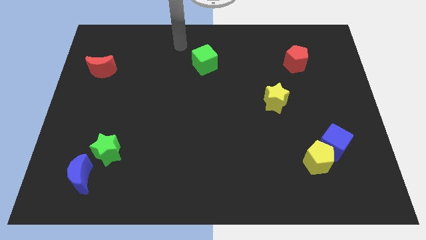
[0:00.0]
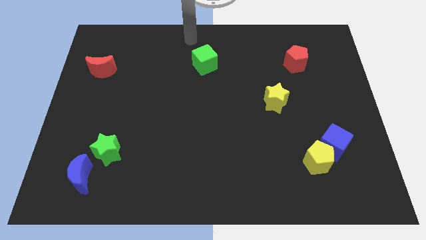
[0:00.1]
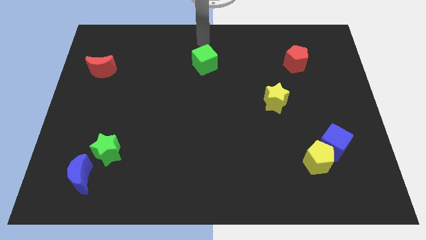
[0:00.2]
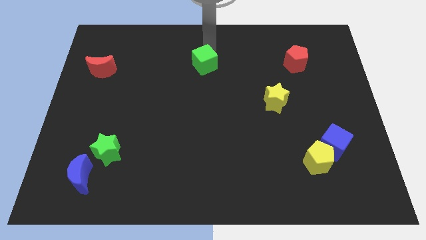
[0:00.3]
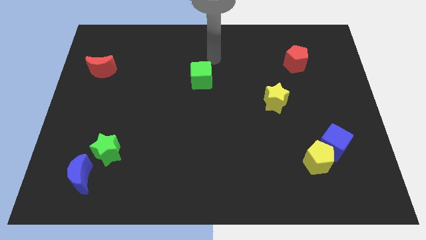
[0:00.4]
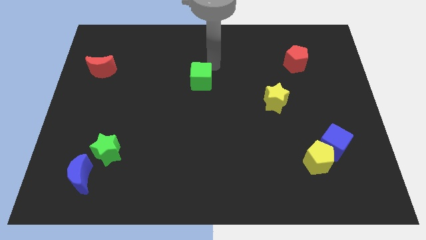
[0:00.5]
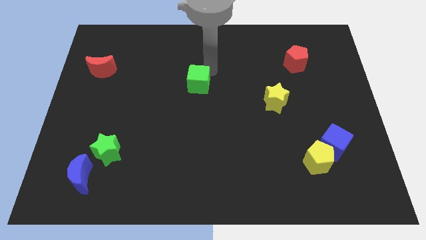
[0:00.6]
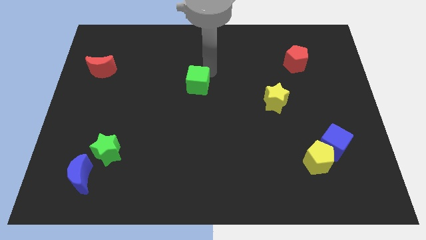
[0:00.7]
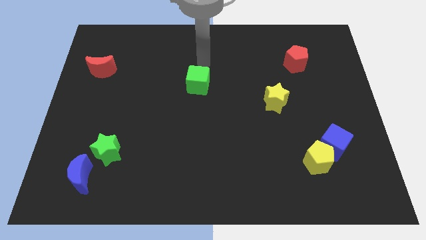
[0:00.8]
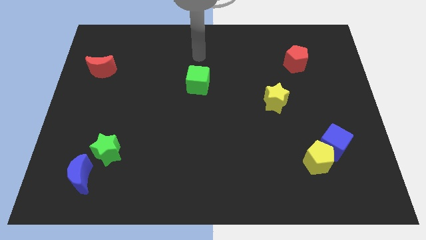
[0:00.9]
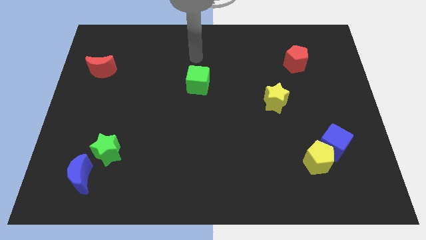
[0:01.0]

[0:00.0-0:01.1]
place your arm above the green cube

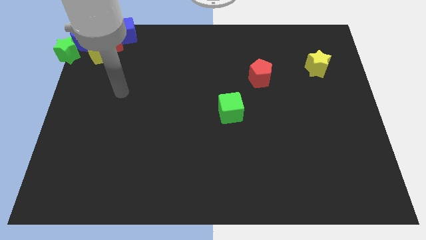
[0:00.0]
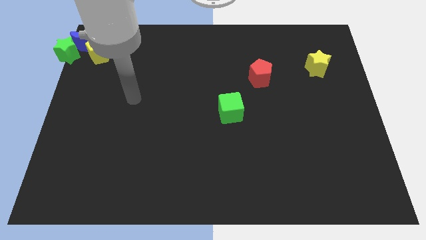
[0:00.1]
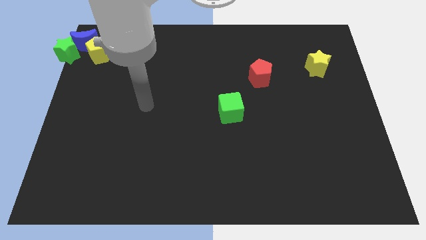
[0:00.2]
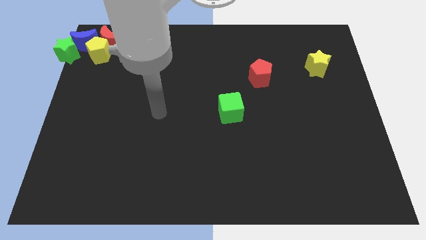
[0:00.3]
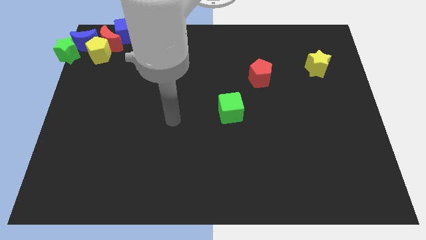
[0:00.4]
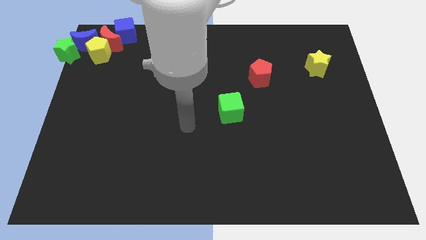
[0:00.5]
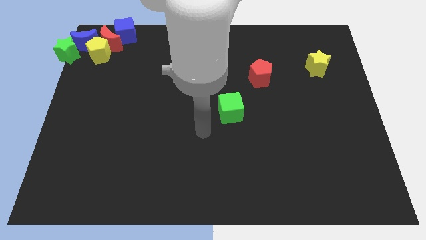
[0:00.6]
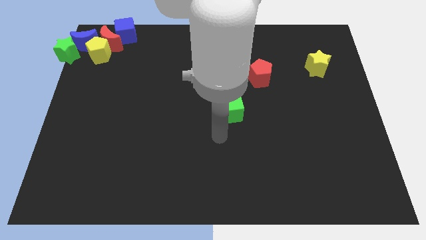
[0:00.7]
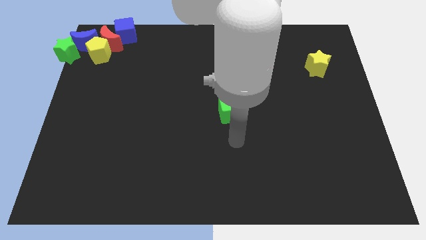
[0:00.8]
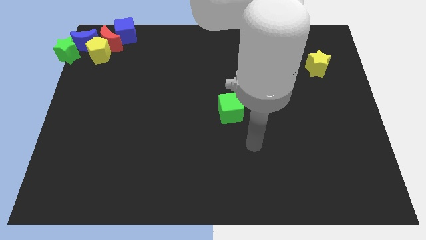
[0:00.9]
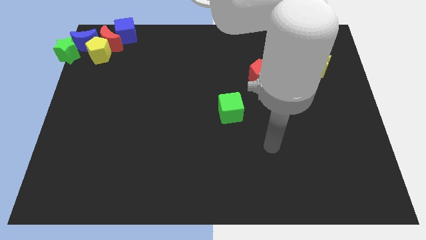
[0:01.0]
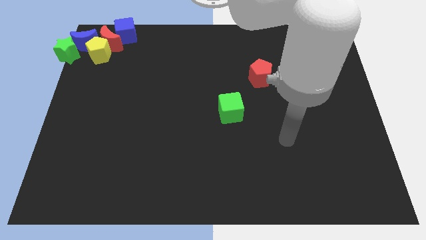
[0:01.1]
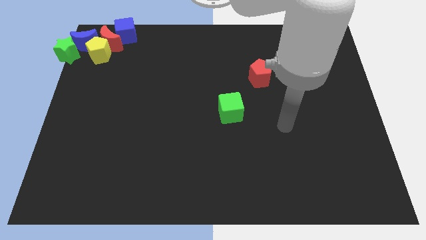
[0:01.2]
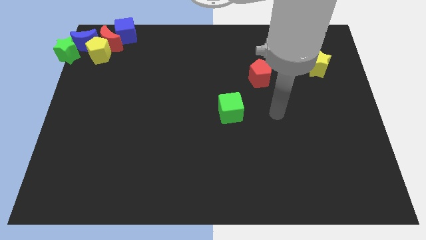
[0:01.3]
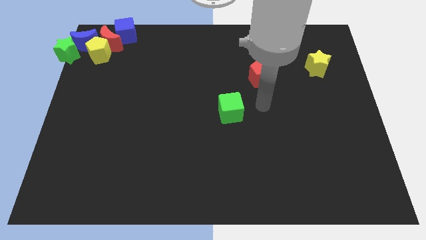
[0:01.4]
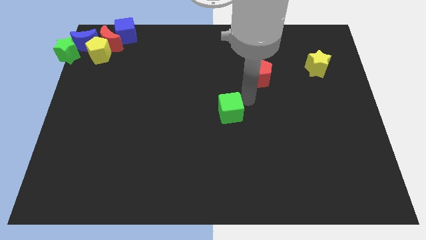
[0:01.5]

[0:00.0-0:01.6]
place the arm to the center of the board

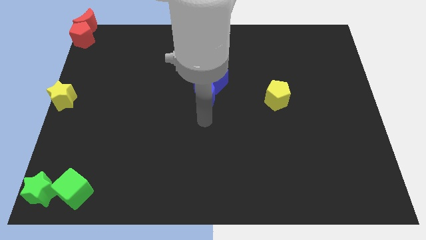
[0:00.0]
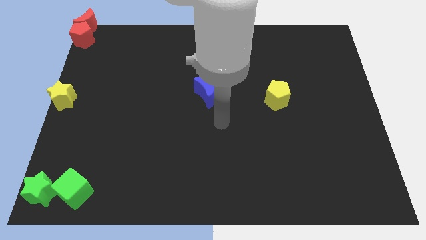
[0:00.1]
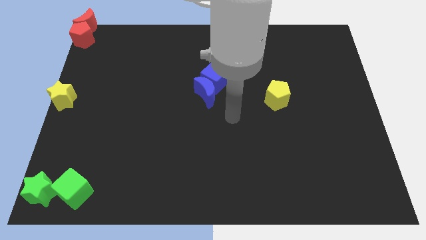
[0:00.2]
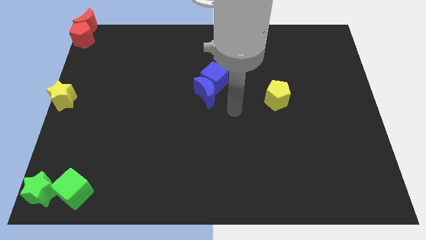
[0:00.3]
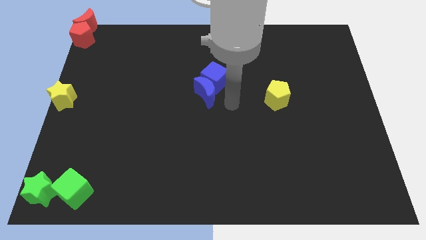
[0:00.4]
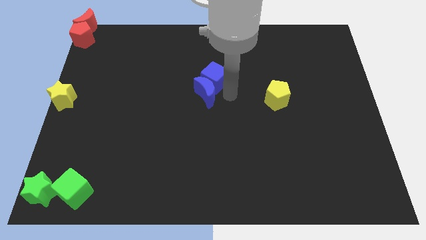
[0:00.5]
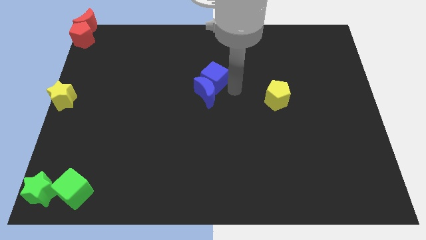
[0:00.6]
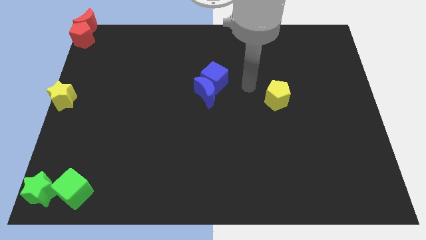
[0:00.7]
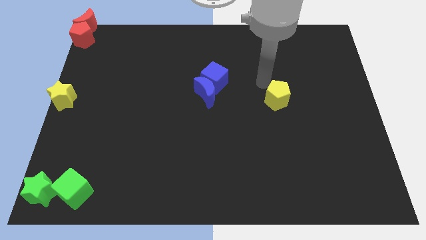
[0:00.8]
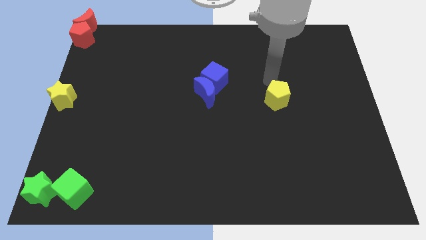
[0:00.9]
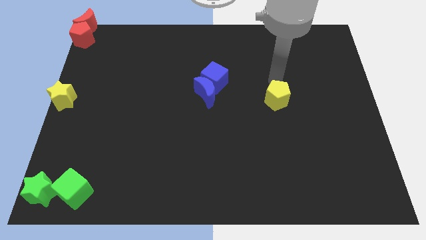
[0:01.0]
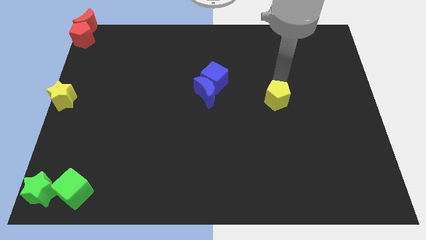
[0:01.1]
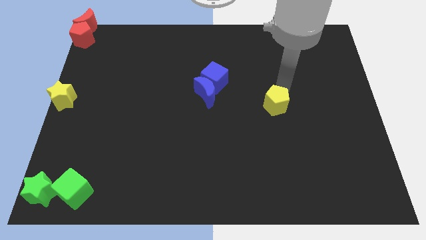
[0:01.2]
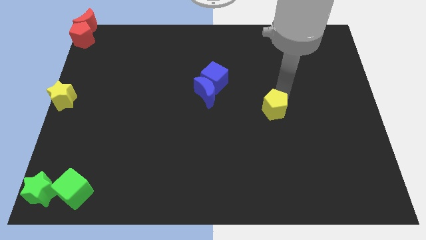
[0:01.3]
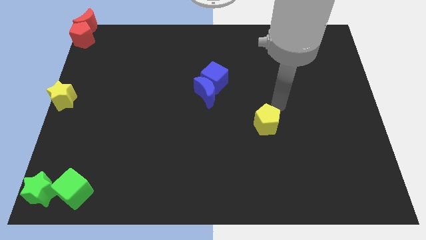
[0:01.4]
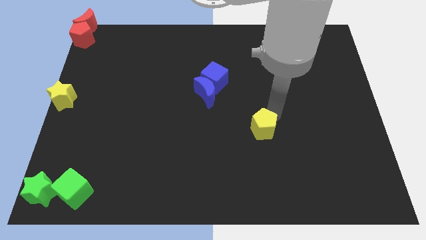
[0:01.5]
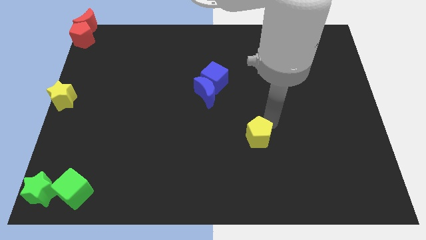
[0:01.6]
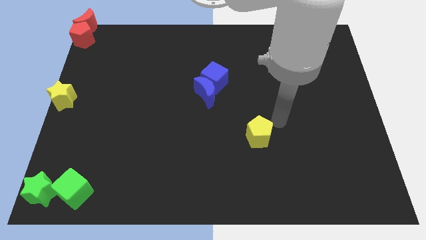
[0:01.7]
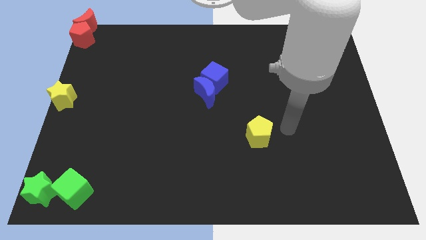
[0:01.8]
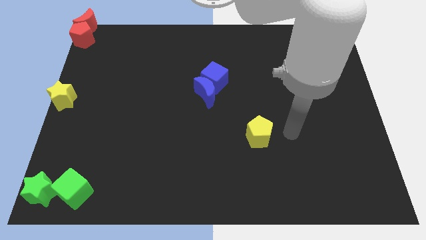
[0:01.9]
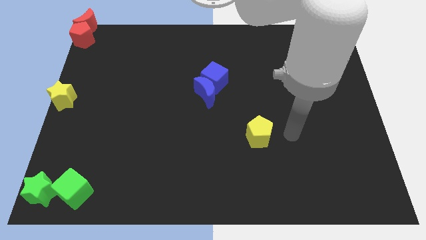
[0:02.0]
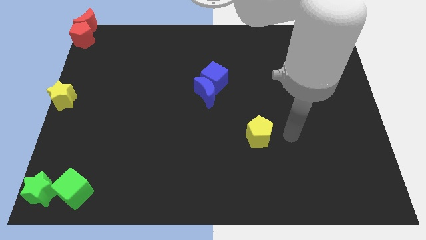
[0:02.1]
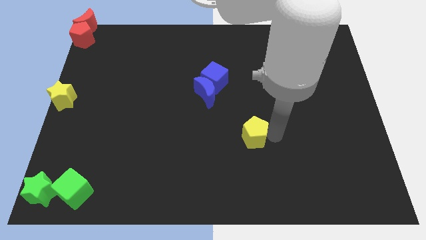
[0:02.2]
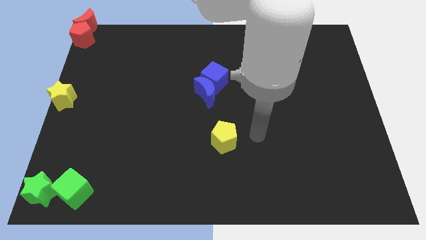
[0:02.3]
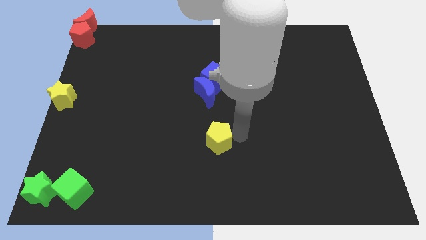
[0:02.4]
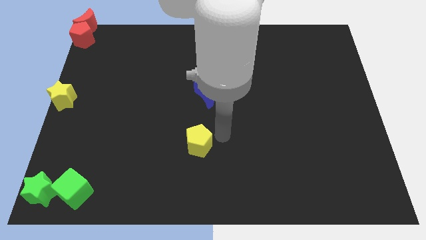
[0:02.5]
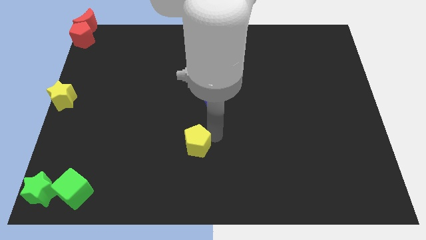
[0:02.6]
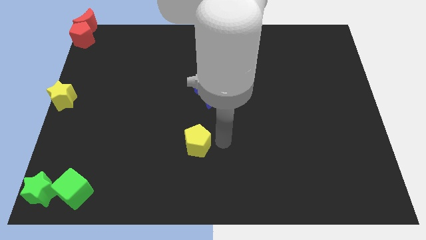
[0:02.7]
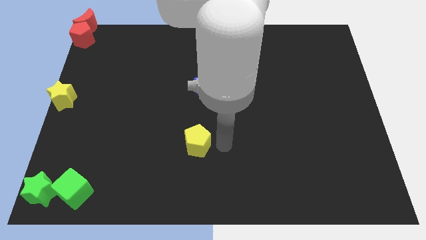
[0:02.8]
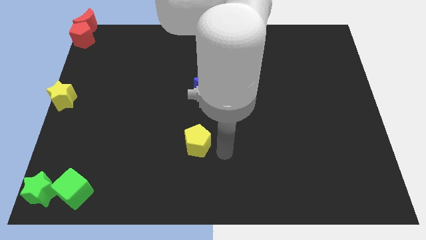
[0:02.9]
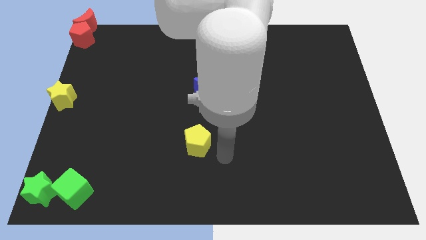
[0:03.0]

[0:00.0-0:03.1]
place the yellow pentagon vertically below the blue moon

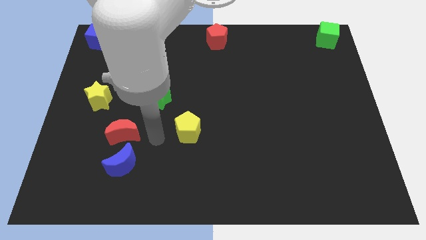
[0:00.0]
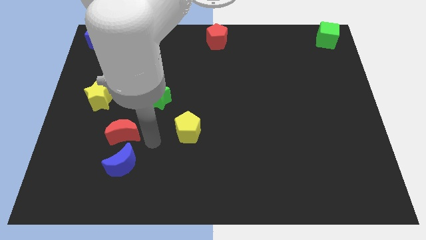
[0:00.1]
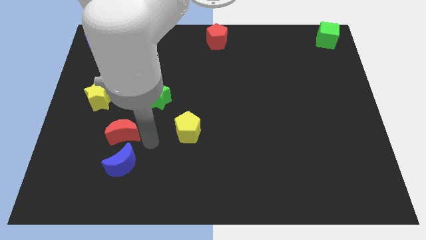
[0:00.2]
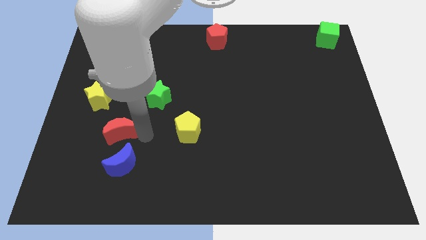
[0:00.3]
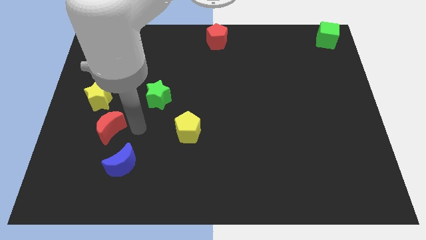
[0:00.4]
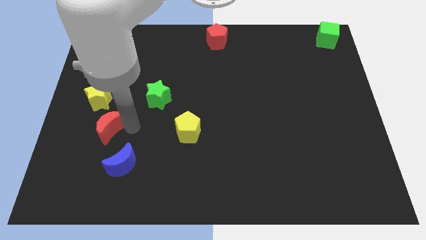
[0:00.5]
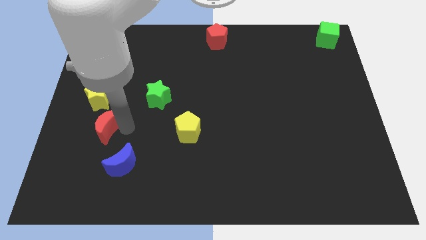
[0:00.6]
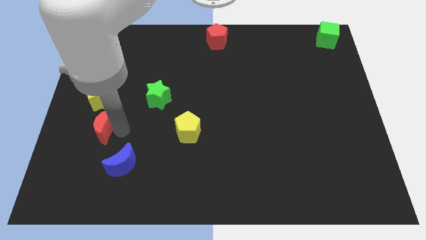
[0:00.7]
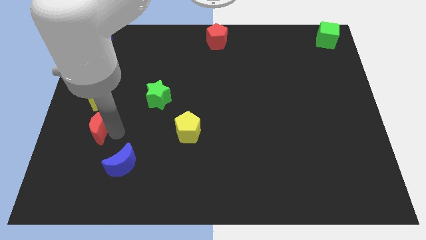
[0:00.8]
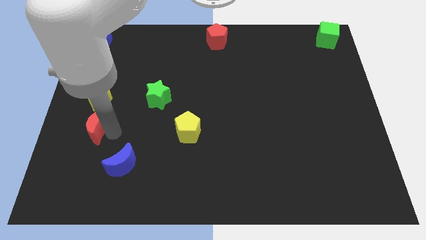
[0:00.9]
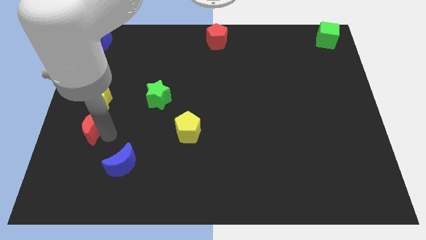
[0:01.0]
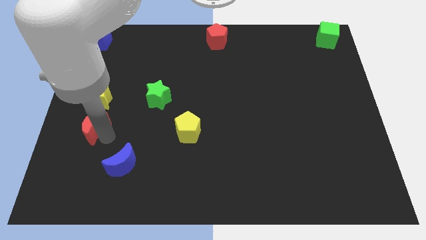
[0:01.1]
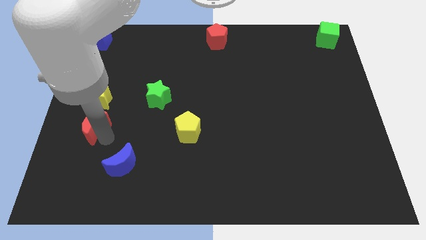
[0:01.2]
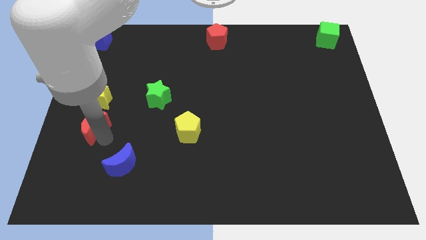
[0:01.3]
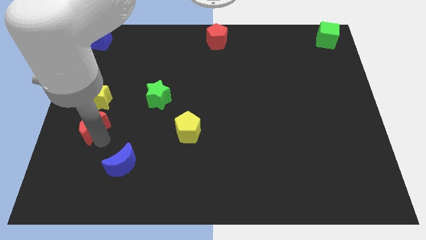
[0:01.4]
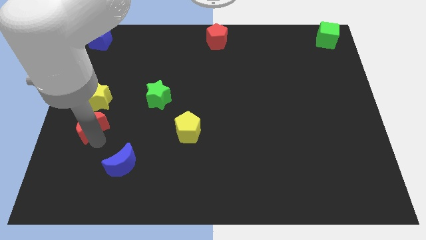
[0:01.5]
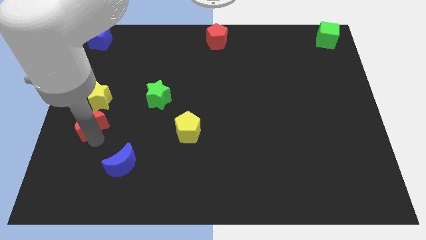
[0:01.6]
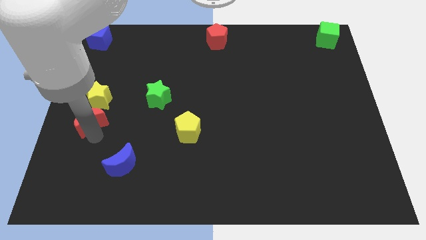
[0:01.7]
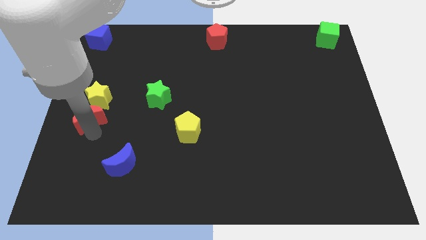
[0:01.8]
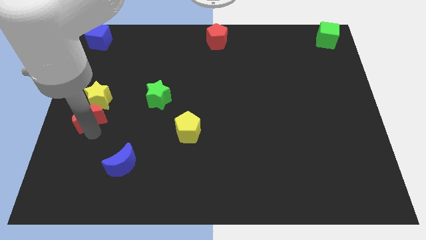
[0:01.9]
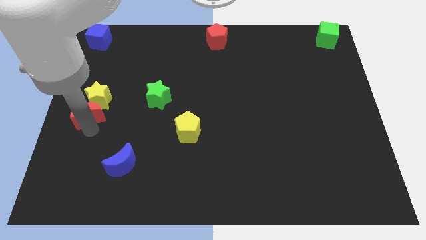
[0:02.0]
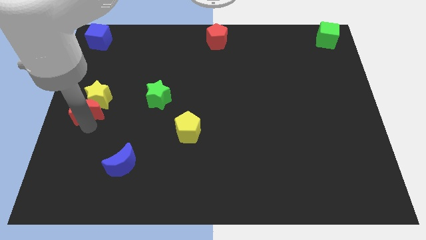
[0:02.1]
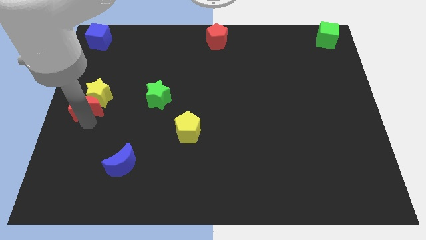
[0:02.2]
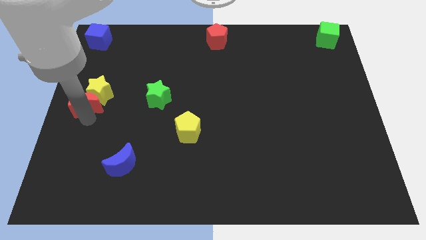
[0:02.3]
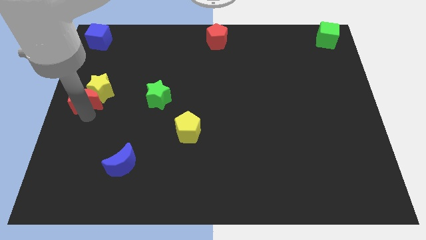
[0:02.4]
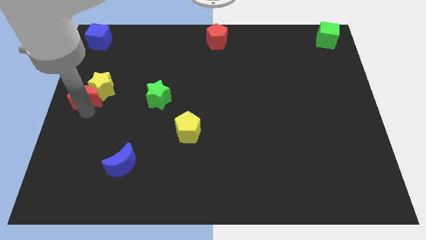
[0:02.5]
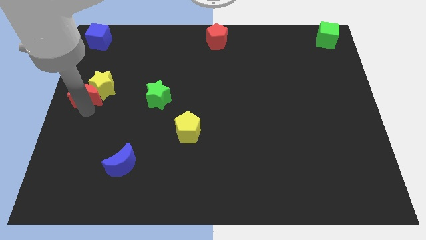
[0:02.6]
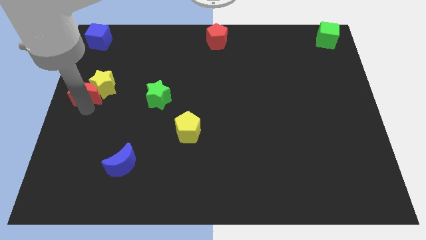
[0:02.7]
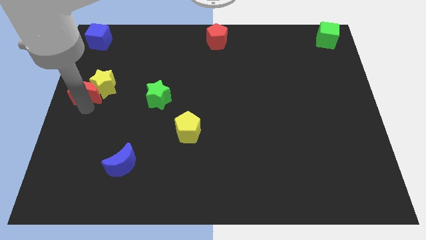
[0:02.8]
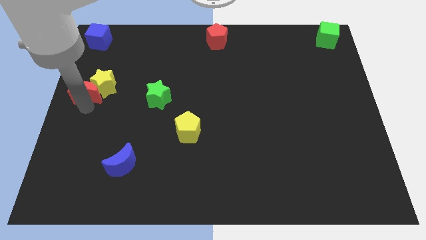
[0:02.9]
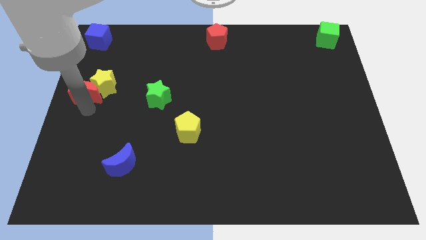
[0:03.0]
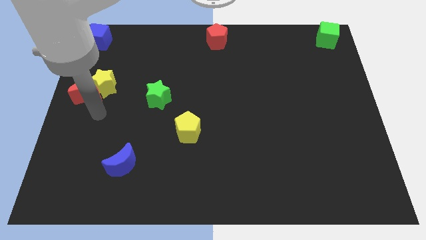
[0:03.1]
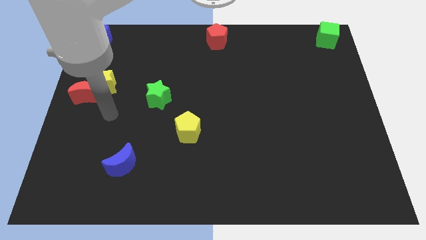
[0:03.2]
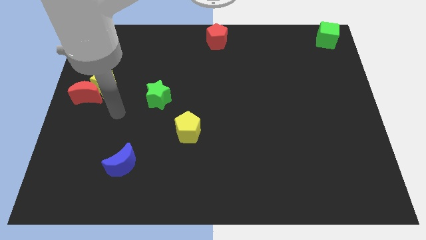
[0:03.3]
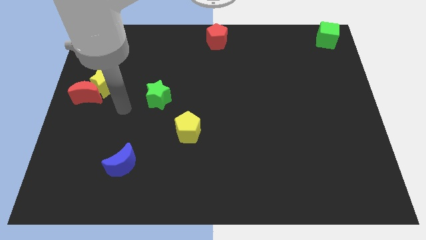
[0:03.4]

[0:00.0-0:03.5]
push the red moon and the yellow star slightly at the top of the center left side of the board
